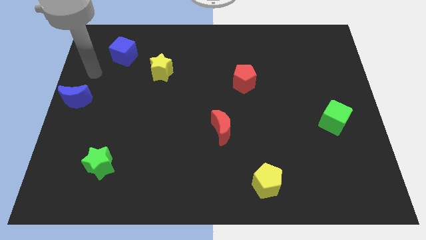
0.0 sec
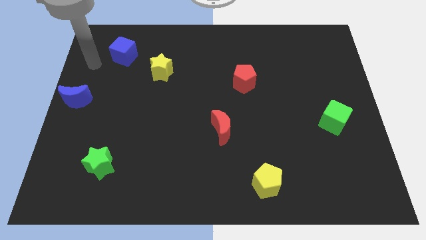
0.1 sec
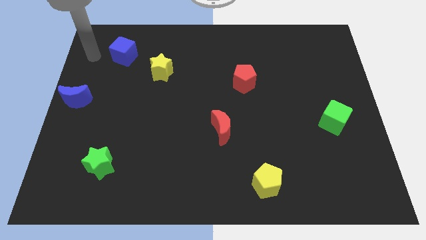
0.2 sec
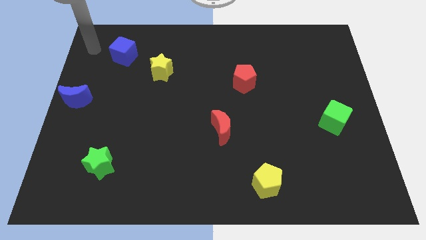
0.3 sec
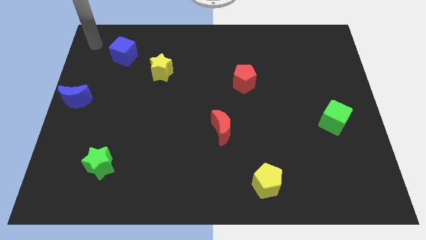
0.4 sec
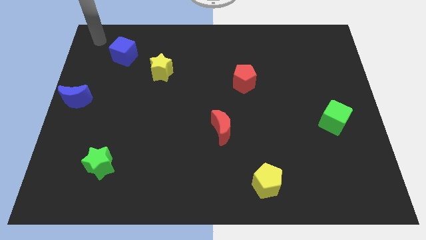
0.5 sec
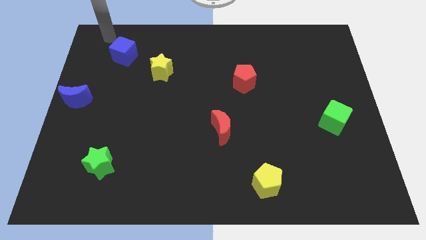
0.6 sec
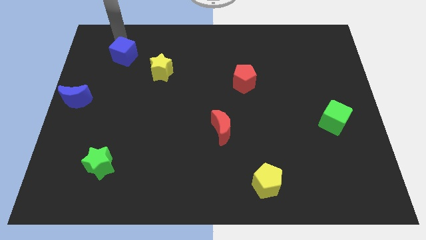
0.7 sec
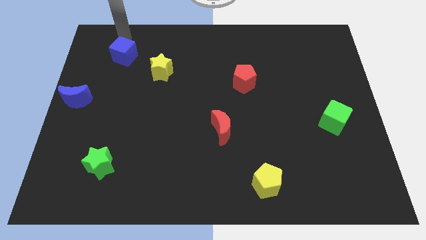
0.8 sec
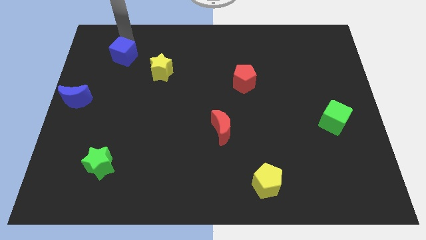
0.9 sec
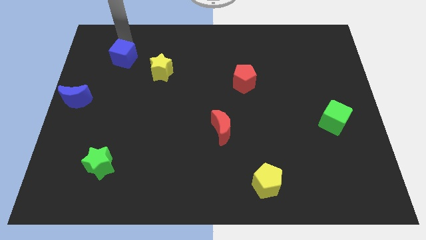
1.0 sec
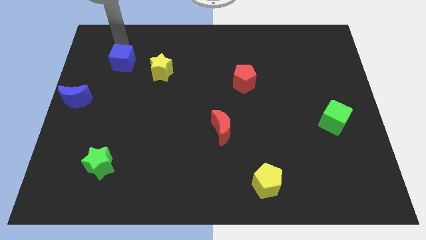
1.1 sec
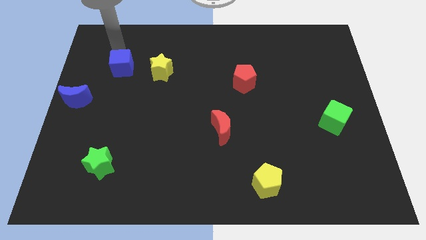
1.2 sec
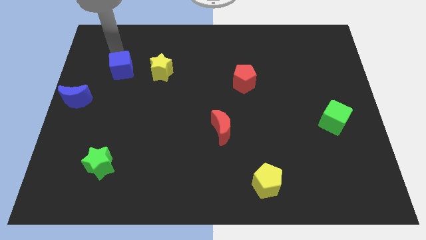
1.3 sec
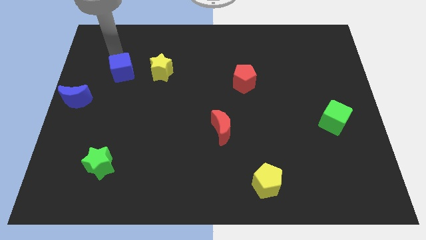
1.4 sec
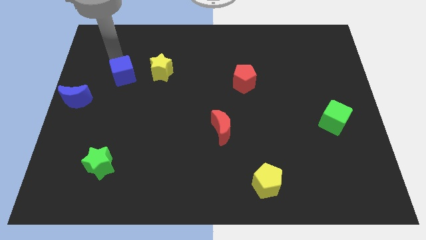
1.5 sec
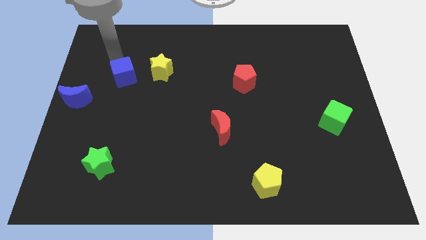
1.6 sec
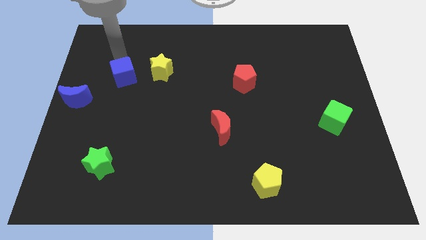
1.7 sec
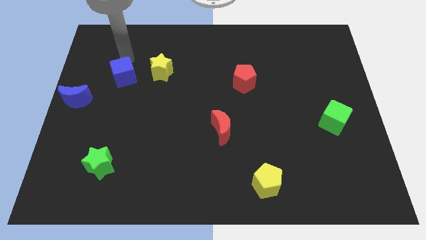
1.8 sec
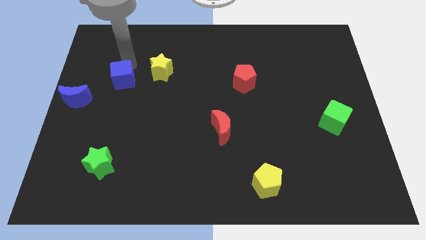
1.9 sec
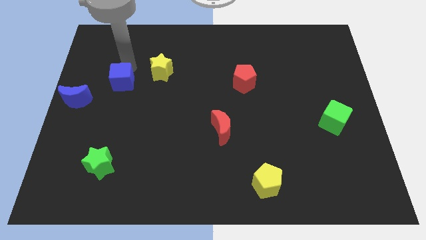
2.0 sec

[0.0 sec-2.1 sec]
slightly push the blue cube downwards towards the top right of the blue crescent

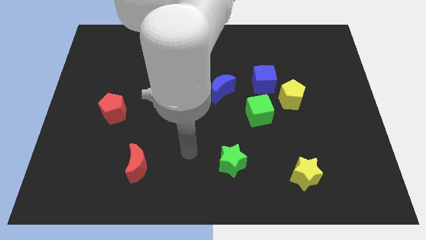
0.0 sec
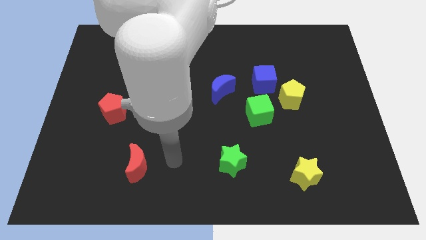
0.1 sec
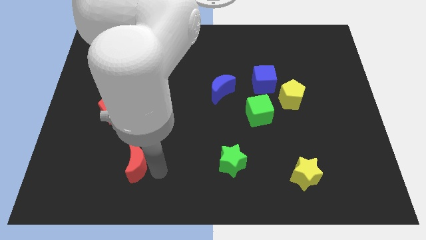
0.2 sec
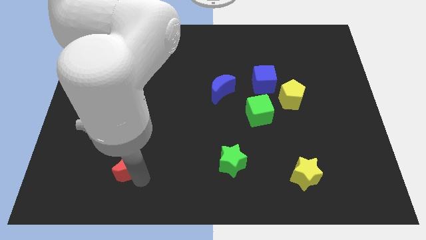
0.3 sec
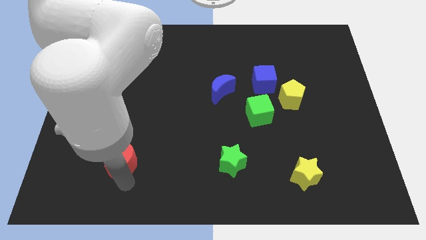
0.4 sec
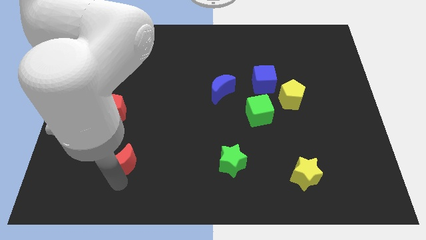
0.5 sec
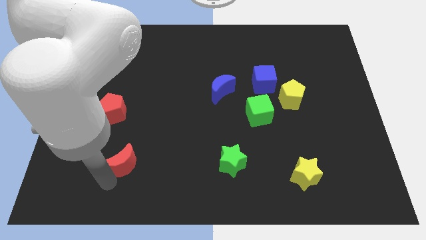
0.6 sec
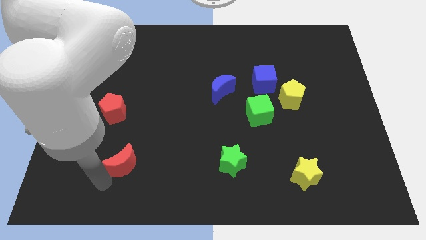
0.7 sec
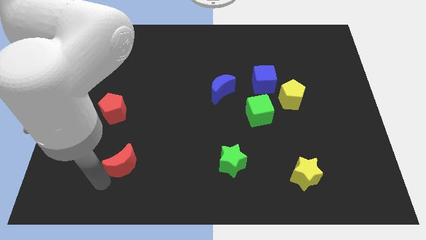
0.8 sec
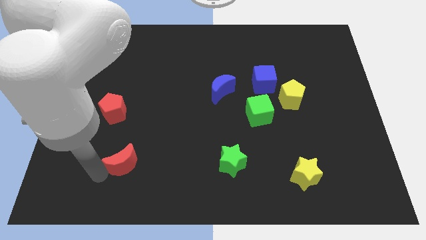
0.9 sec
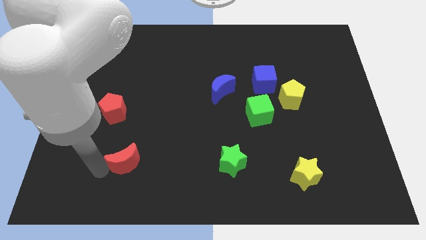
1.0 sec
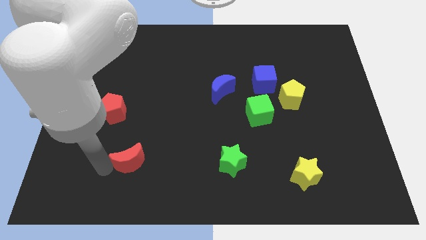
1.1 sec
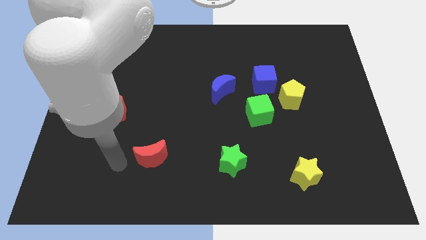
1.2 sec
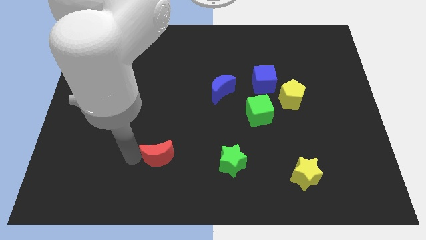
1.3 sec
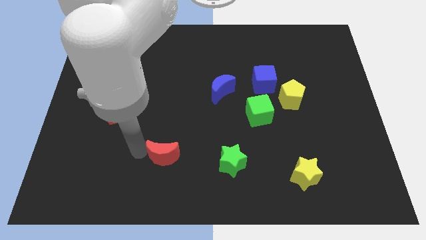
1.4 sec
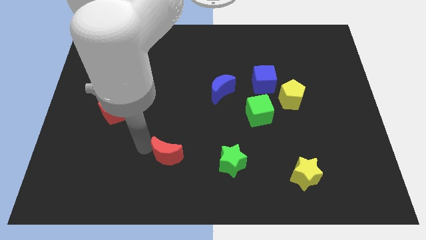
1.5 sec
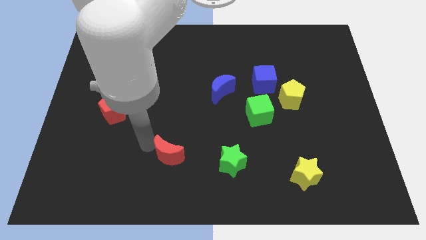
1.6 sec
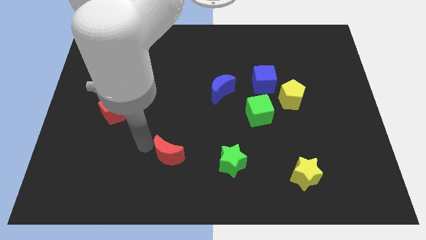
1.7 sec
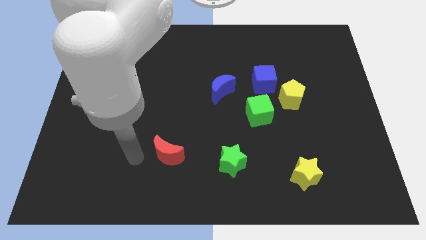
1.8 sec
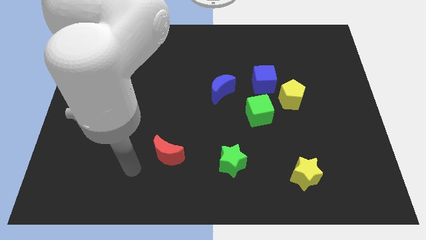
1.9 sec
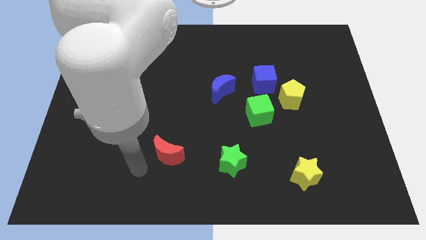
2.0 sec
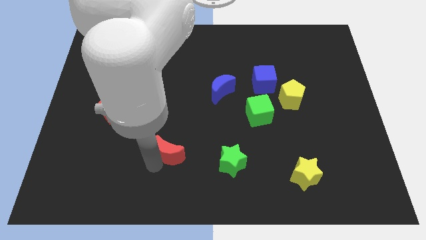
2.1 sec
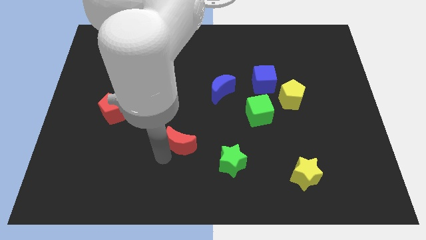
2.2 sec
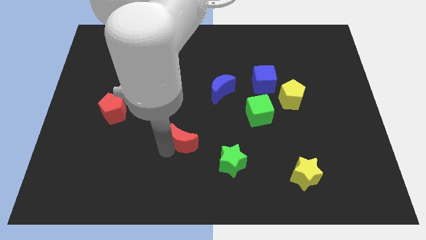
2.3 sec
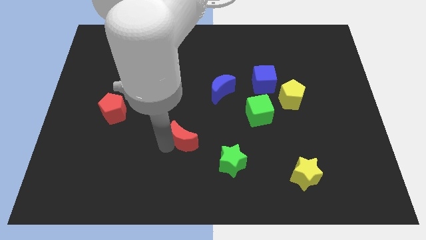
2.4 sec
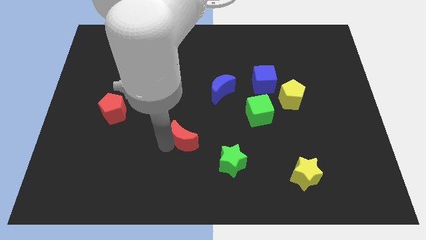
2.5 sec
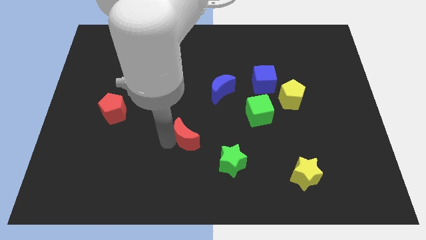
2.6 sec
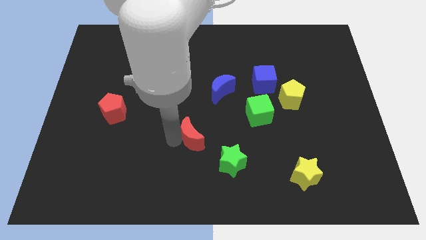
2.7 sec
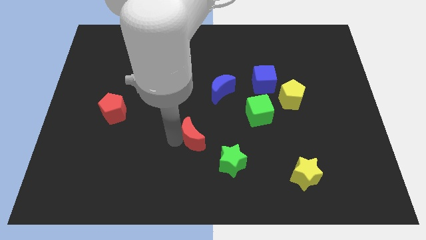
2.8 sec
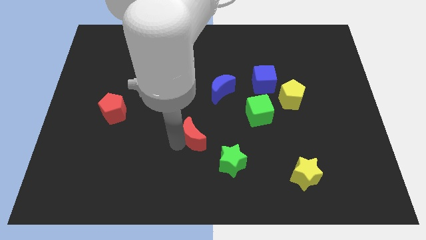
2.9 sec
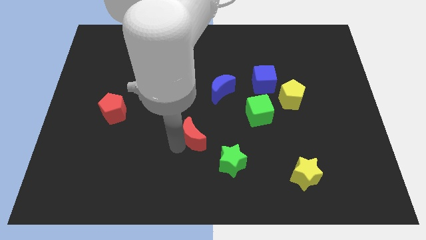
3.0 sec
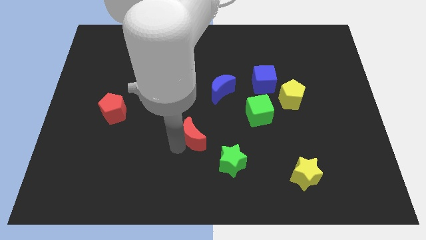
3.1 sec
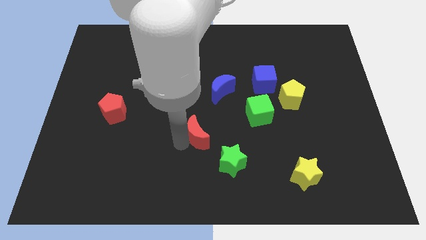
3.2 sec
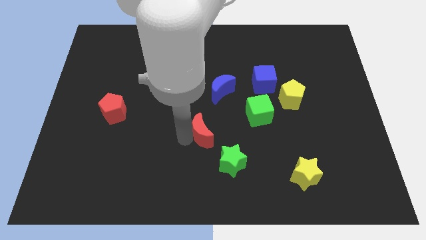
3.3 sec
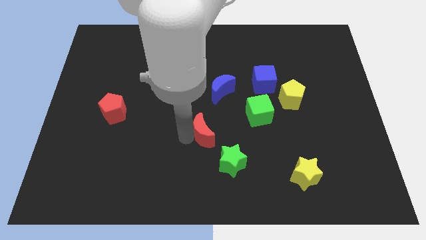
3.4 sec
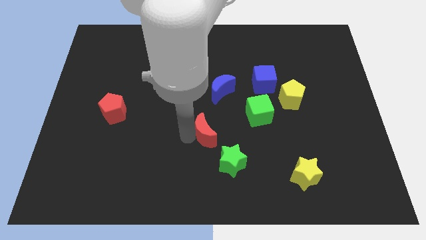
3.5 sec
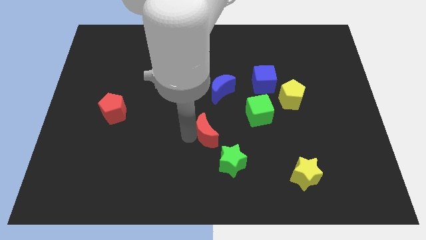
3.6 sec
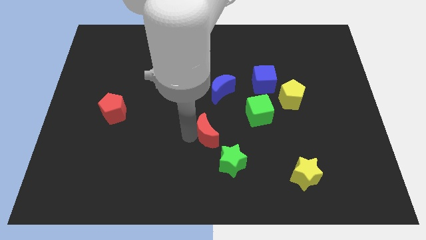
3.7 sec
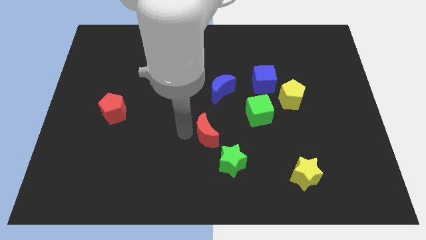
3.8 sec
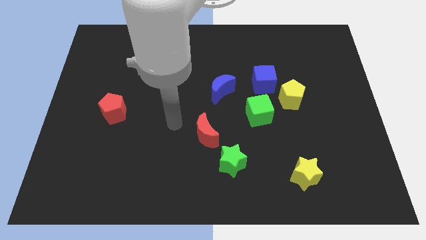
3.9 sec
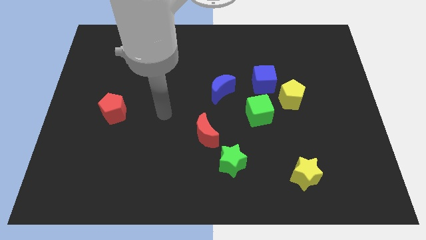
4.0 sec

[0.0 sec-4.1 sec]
place the red moon to the top left side of the green star

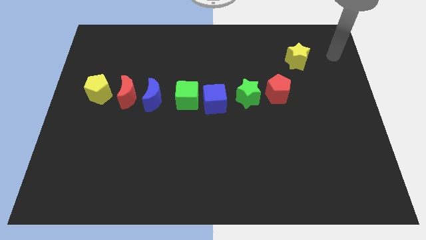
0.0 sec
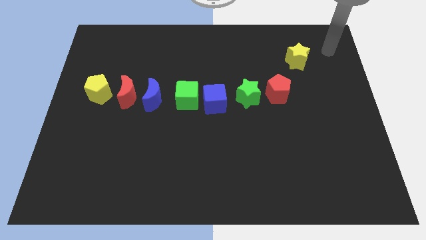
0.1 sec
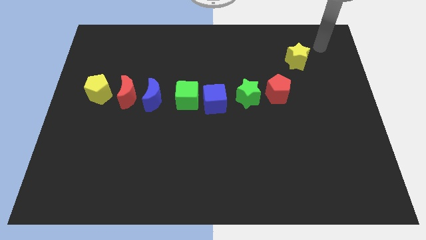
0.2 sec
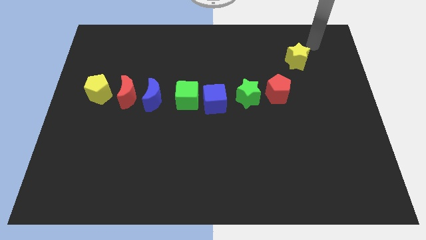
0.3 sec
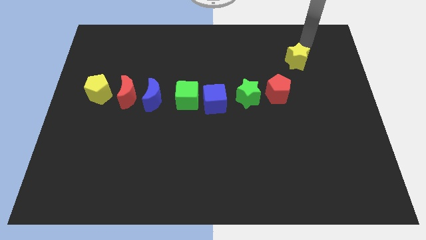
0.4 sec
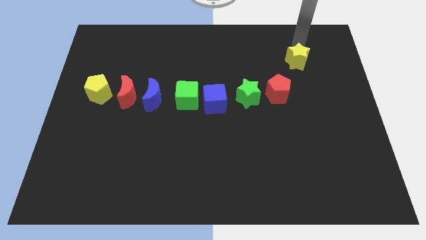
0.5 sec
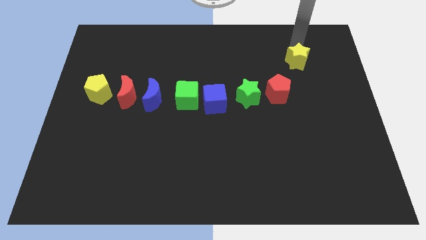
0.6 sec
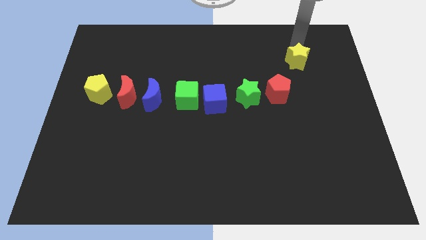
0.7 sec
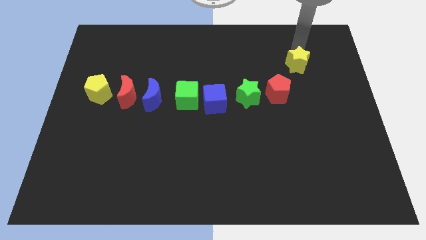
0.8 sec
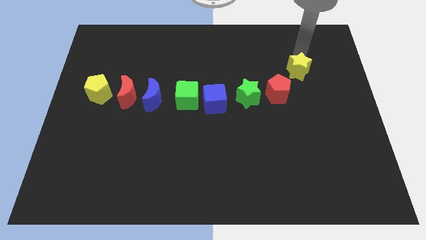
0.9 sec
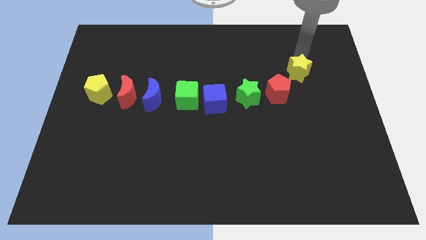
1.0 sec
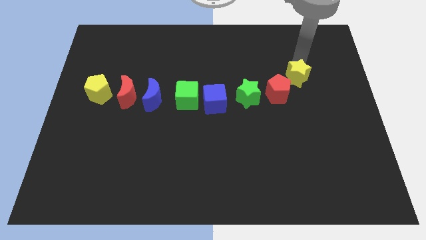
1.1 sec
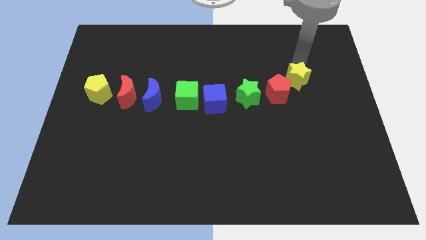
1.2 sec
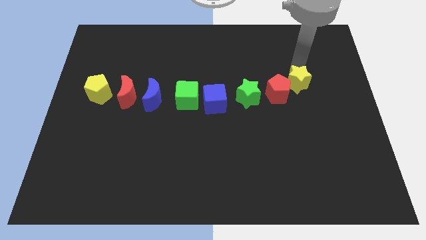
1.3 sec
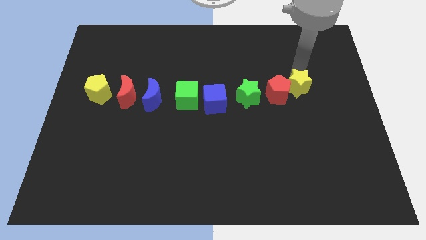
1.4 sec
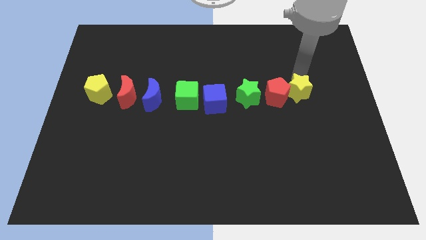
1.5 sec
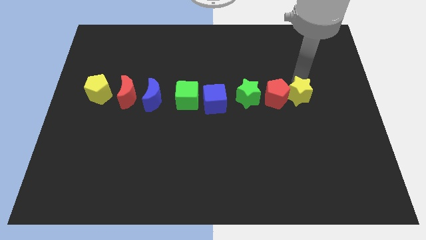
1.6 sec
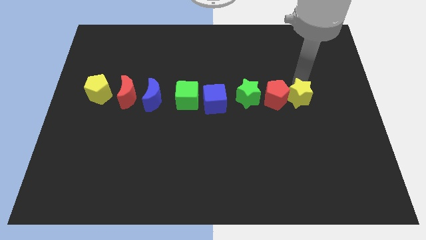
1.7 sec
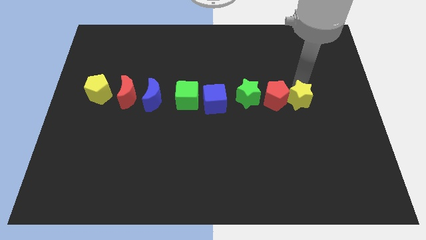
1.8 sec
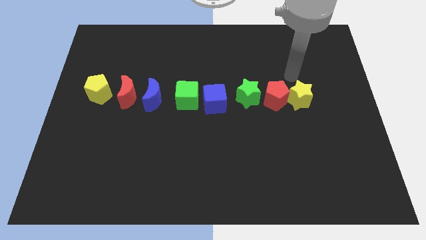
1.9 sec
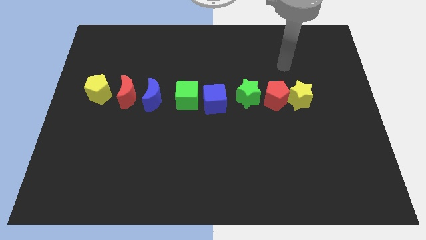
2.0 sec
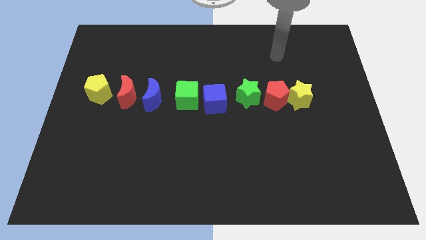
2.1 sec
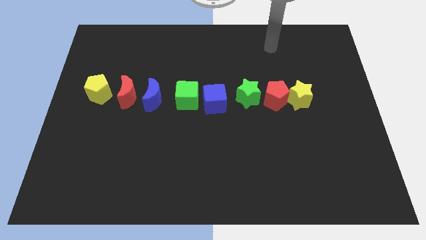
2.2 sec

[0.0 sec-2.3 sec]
place the yellow star to the right of red pentagon

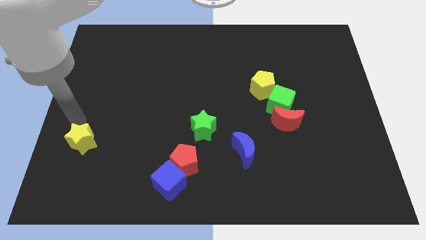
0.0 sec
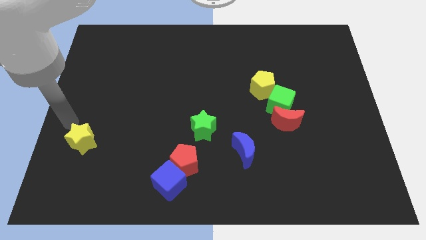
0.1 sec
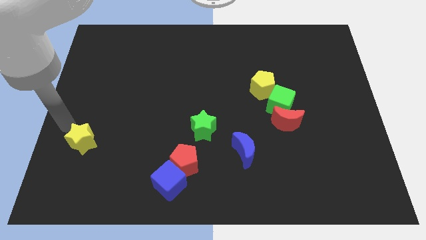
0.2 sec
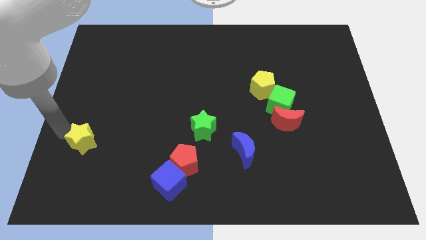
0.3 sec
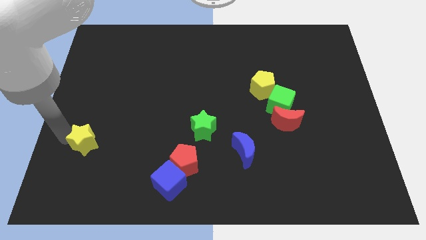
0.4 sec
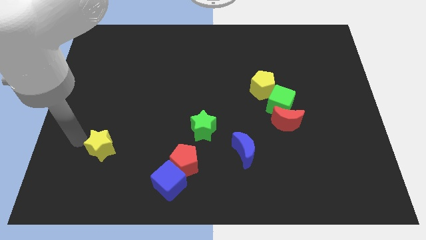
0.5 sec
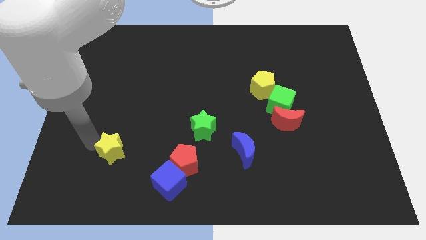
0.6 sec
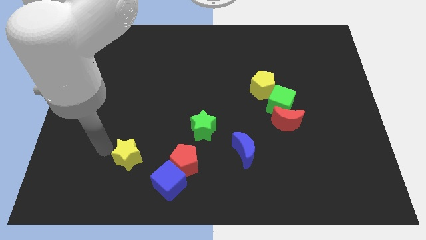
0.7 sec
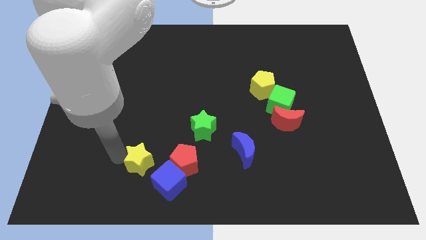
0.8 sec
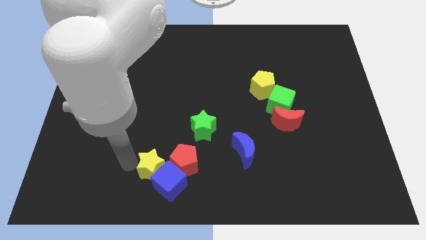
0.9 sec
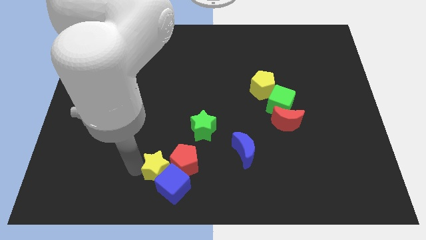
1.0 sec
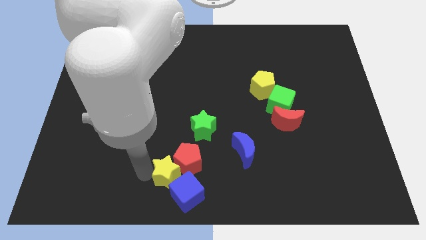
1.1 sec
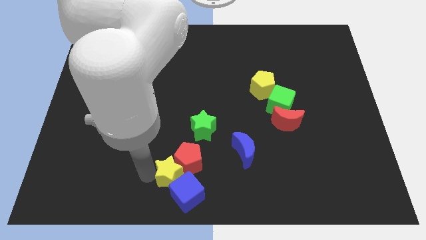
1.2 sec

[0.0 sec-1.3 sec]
push yellow star in to blue cube
